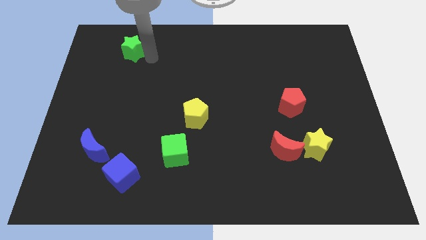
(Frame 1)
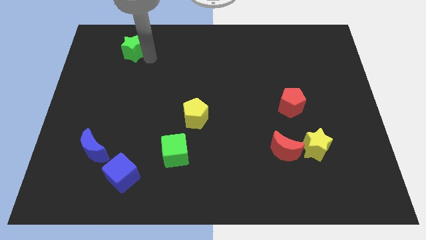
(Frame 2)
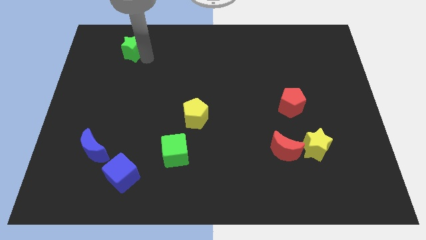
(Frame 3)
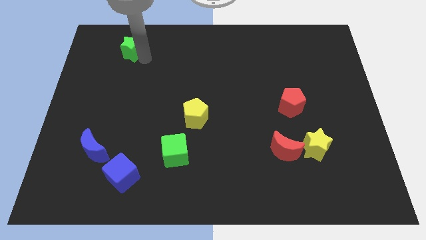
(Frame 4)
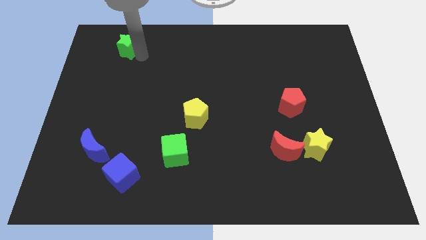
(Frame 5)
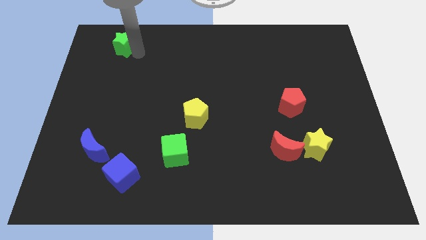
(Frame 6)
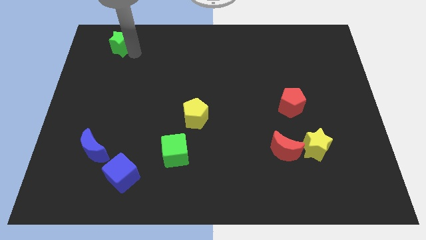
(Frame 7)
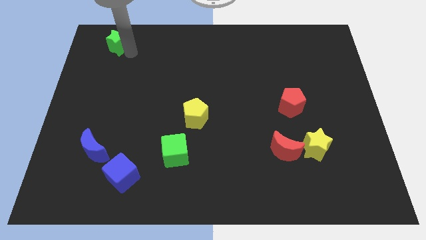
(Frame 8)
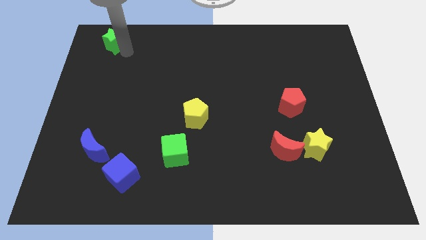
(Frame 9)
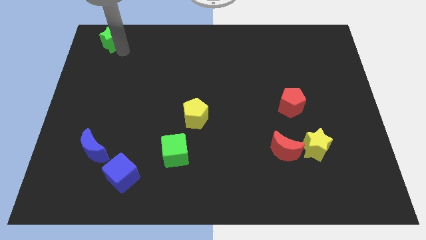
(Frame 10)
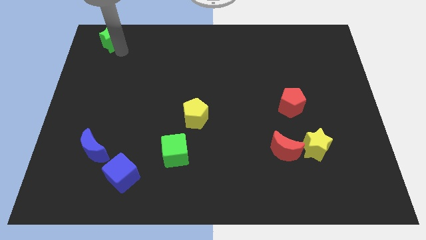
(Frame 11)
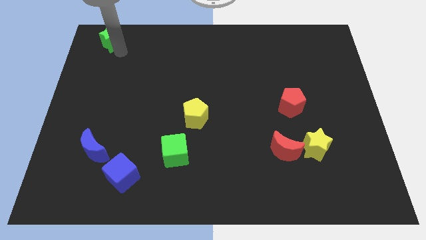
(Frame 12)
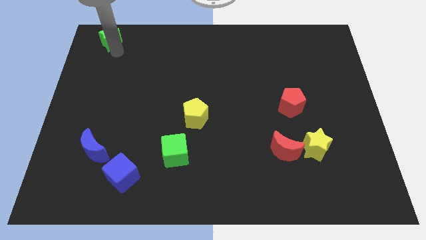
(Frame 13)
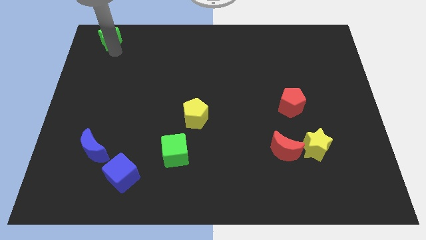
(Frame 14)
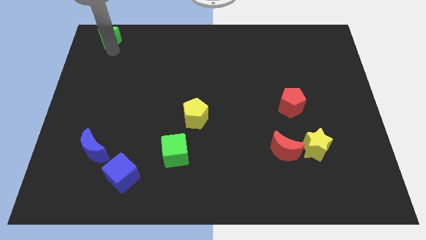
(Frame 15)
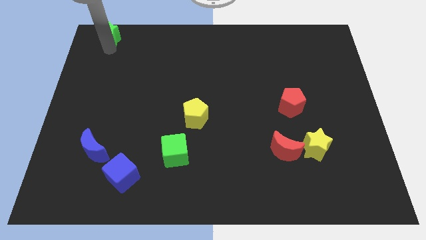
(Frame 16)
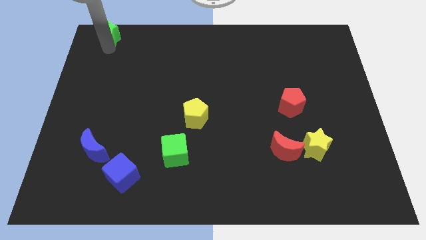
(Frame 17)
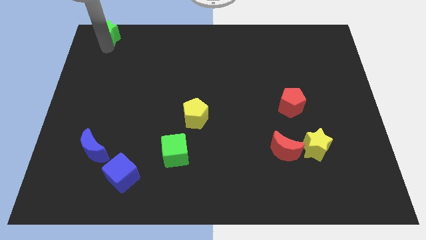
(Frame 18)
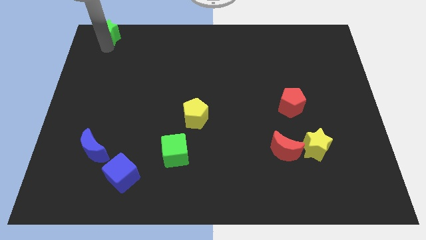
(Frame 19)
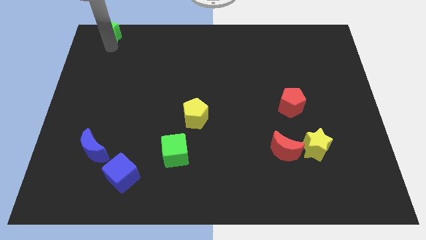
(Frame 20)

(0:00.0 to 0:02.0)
move the green star towards the top left

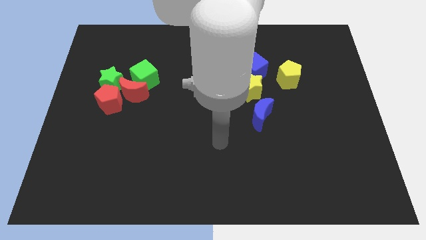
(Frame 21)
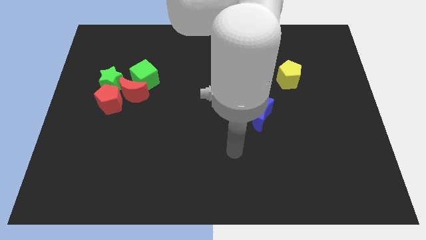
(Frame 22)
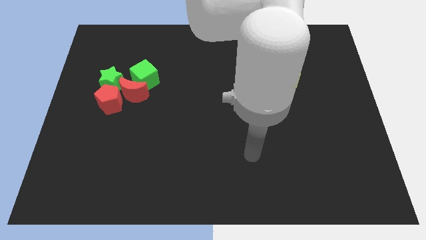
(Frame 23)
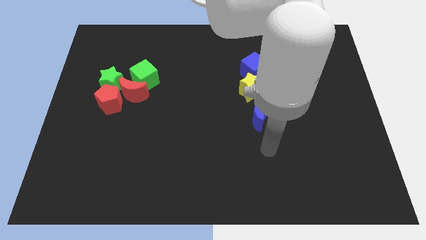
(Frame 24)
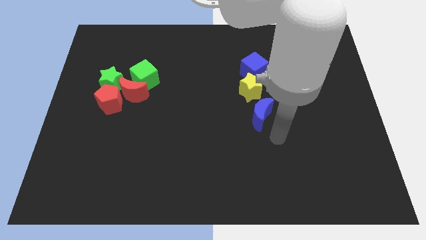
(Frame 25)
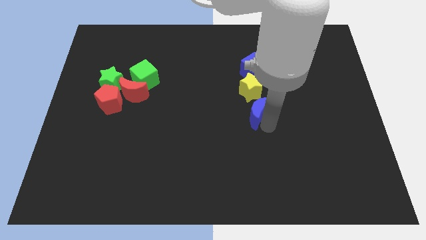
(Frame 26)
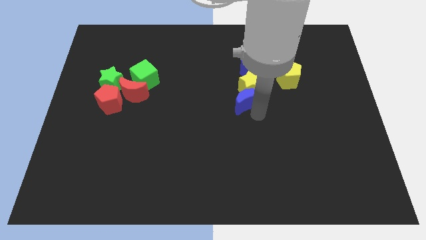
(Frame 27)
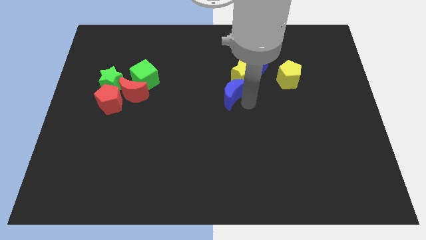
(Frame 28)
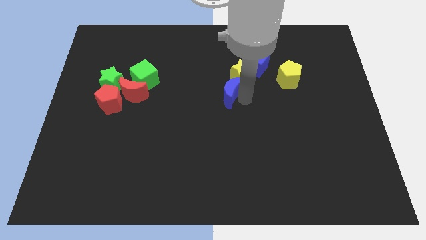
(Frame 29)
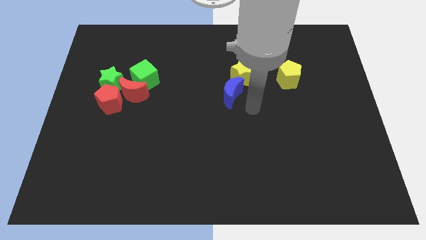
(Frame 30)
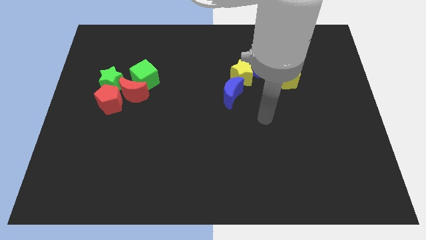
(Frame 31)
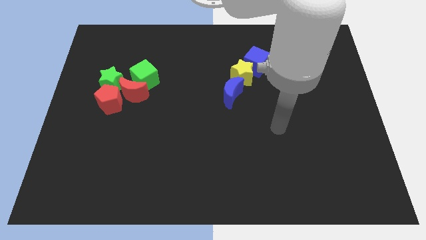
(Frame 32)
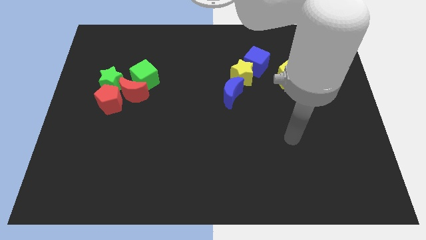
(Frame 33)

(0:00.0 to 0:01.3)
put the blue moon into the bottom left side of the yellow star

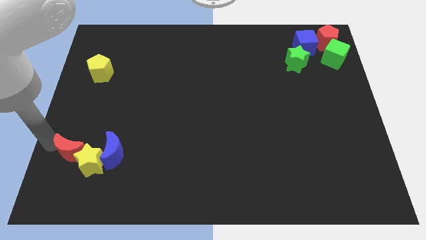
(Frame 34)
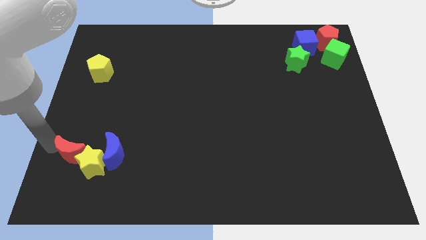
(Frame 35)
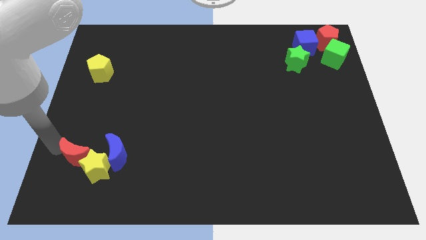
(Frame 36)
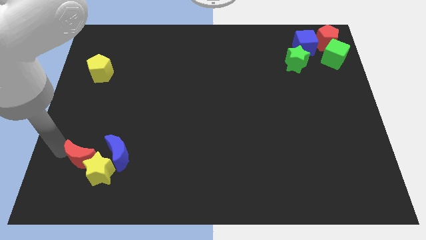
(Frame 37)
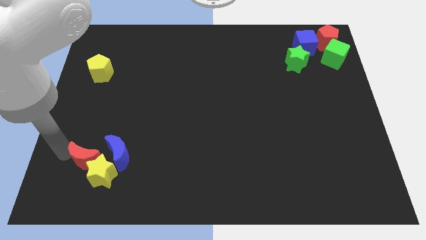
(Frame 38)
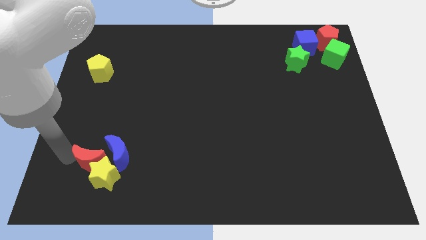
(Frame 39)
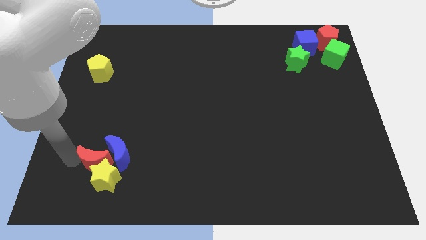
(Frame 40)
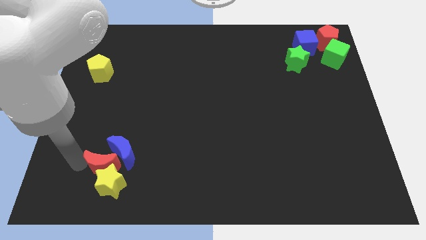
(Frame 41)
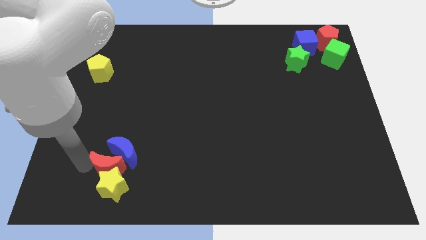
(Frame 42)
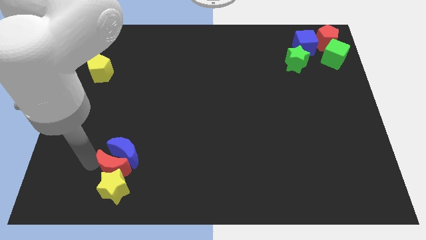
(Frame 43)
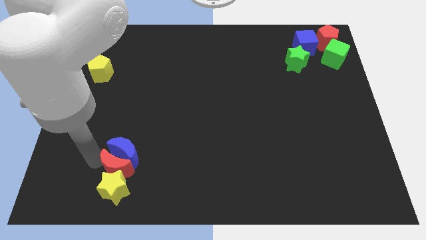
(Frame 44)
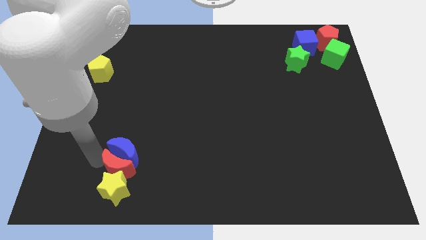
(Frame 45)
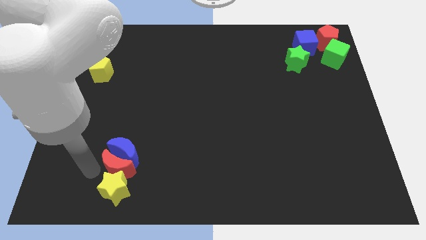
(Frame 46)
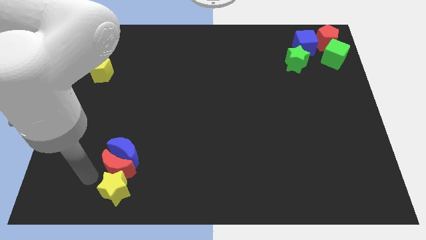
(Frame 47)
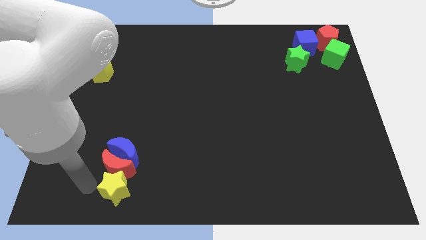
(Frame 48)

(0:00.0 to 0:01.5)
place red moon to the top of the yellow star

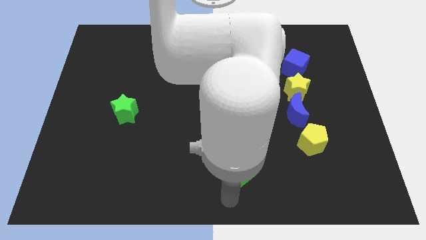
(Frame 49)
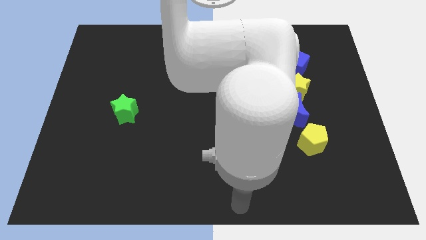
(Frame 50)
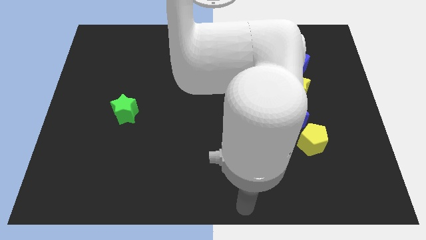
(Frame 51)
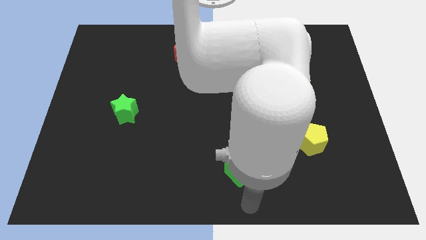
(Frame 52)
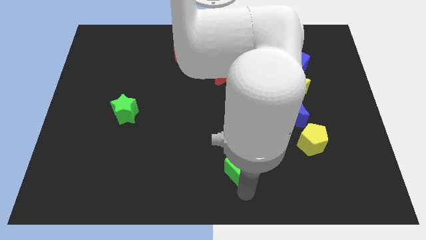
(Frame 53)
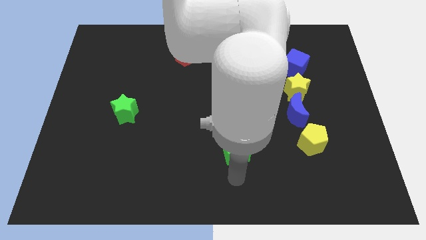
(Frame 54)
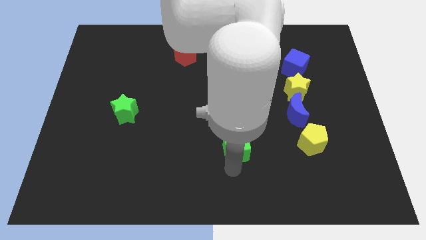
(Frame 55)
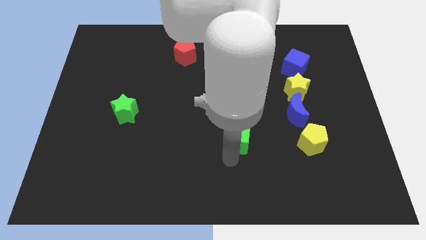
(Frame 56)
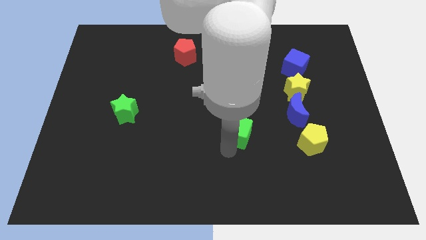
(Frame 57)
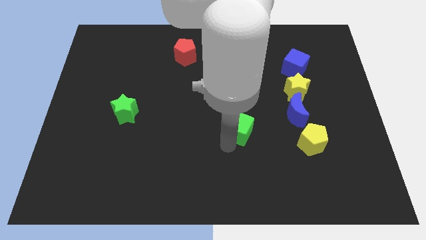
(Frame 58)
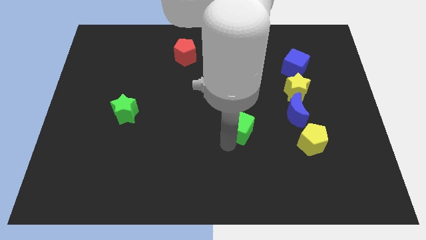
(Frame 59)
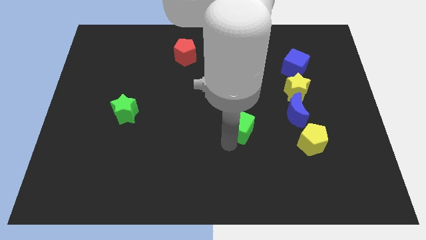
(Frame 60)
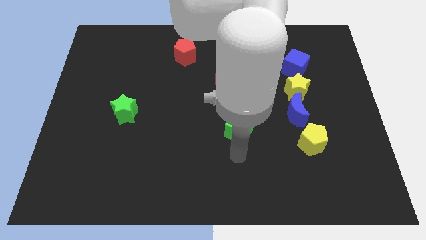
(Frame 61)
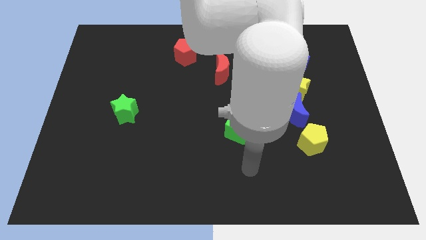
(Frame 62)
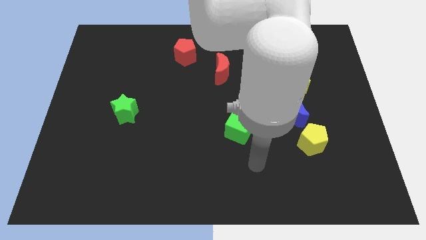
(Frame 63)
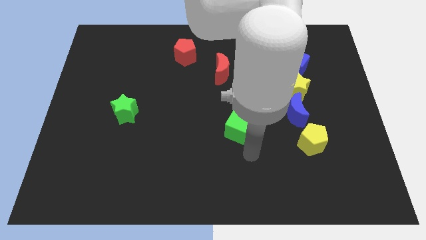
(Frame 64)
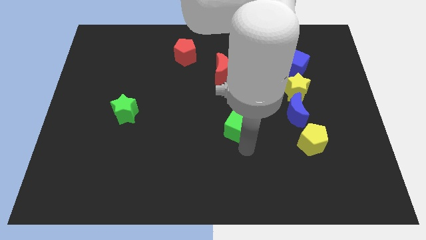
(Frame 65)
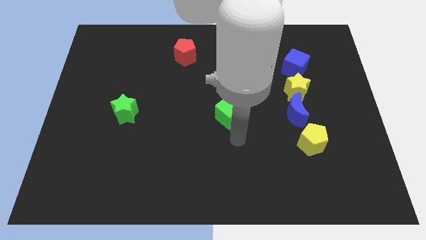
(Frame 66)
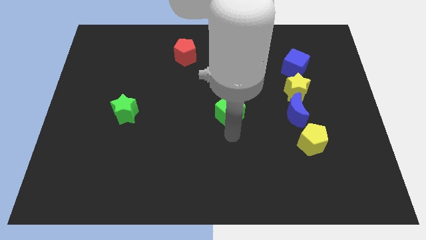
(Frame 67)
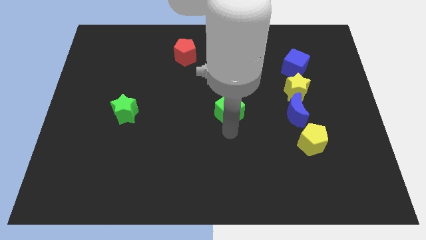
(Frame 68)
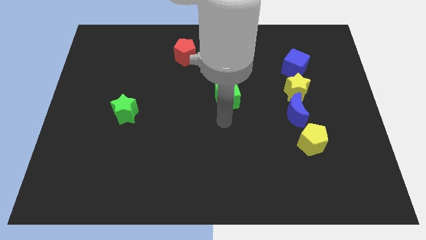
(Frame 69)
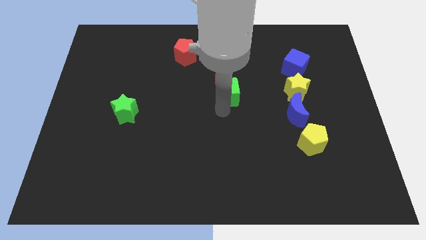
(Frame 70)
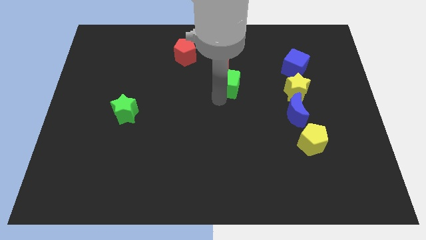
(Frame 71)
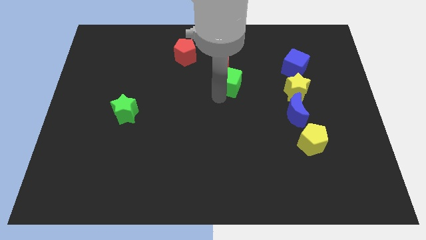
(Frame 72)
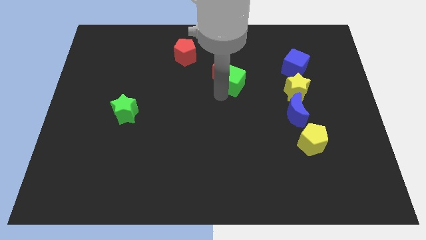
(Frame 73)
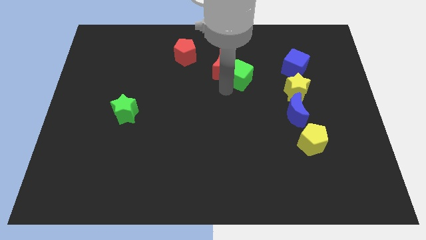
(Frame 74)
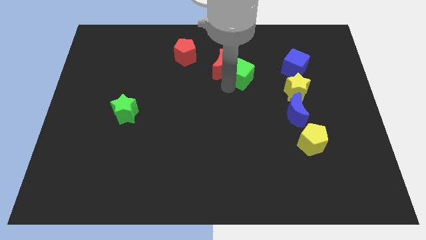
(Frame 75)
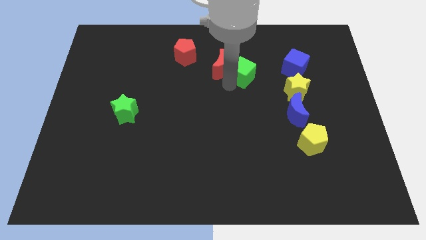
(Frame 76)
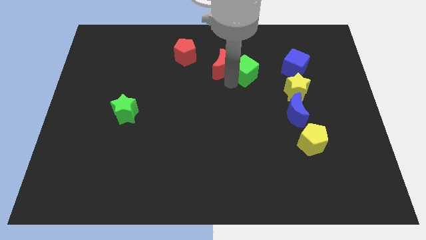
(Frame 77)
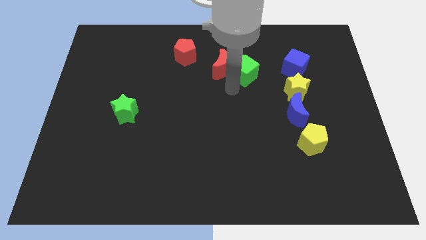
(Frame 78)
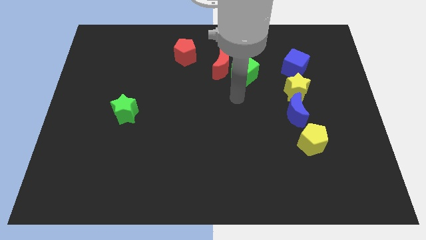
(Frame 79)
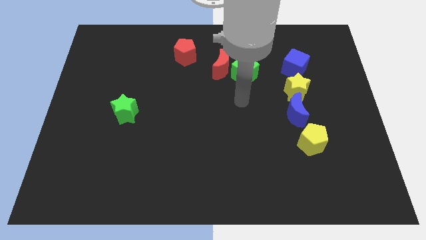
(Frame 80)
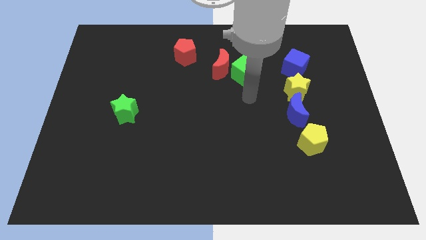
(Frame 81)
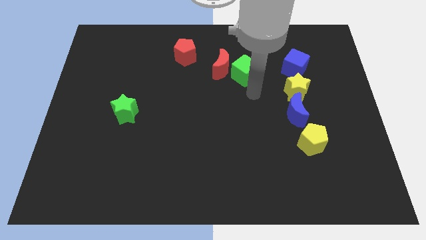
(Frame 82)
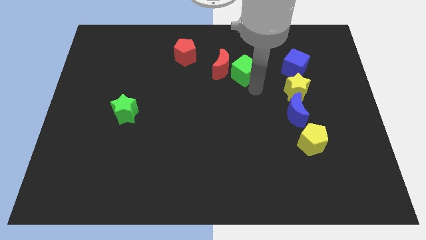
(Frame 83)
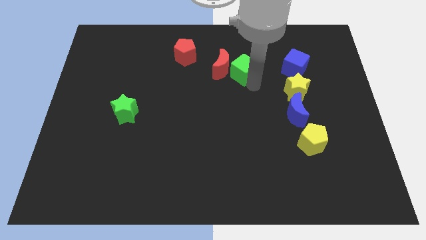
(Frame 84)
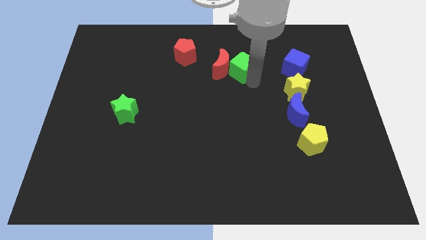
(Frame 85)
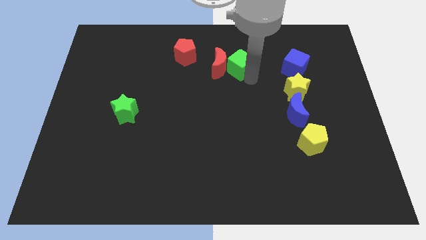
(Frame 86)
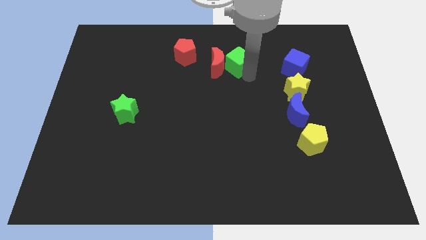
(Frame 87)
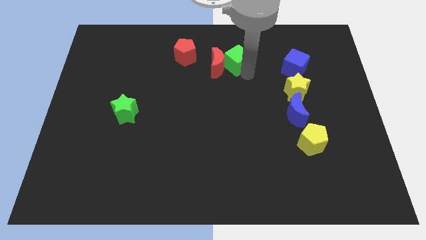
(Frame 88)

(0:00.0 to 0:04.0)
place green cube to the right of red crescent

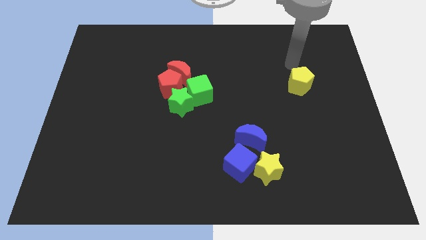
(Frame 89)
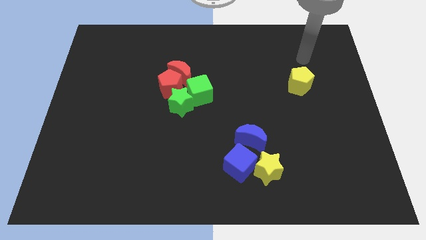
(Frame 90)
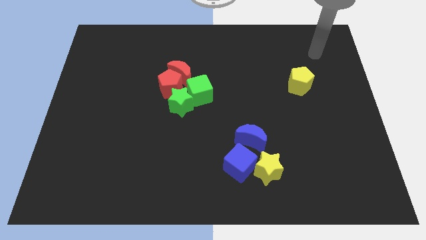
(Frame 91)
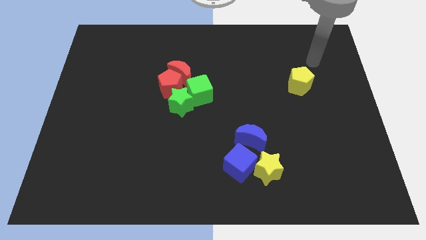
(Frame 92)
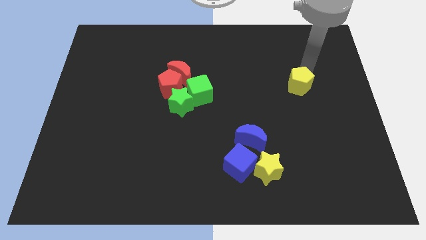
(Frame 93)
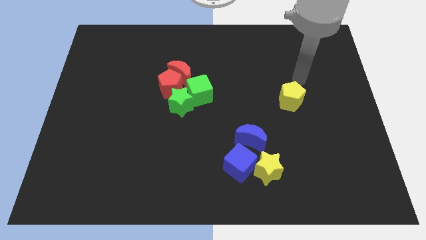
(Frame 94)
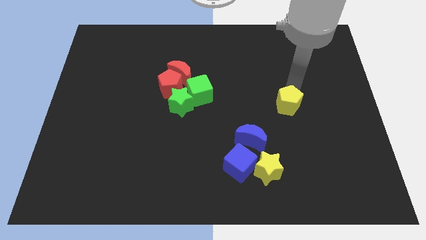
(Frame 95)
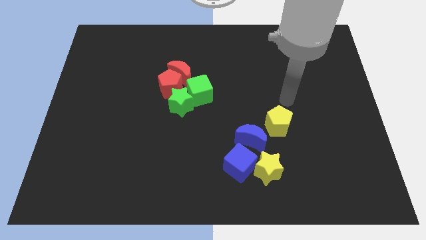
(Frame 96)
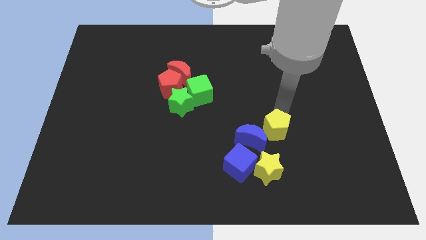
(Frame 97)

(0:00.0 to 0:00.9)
push the yellow pentagon towards the blue moon
